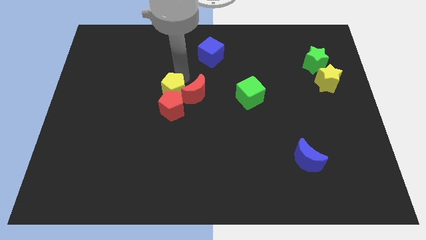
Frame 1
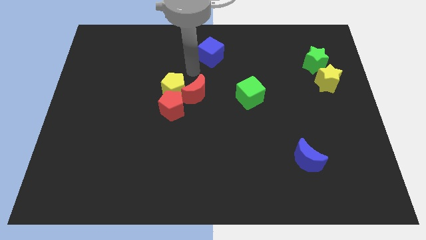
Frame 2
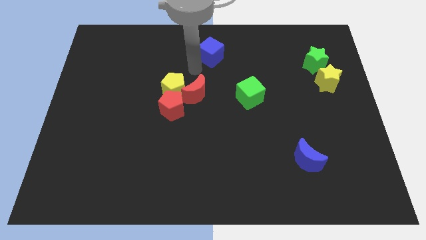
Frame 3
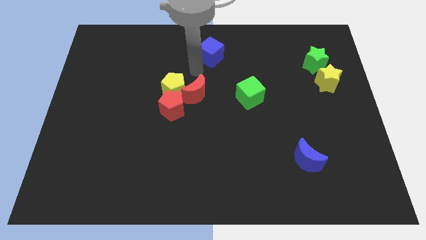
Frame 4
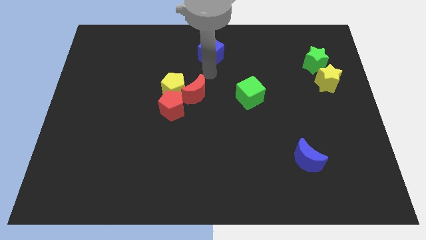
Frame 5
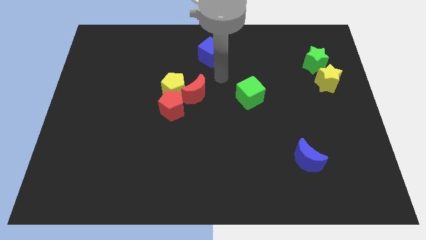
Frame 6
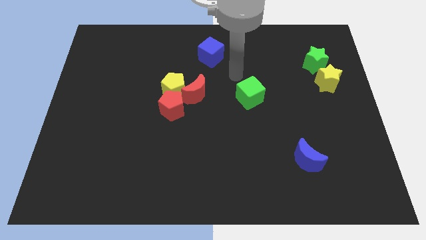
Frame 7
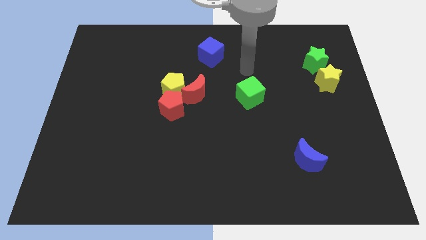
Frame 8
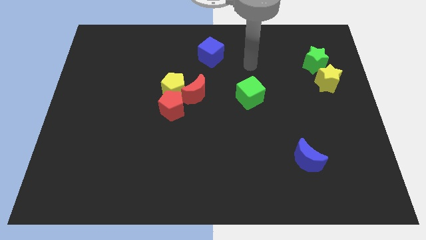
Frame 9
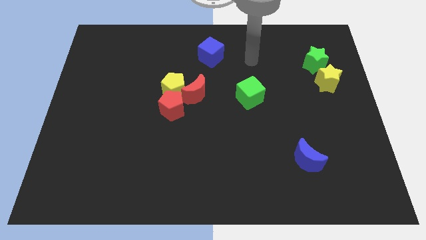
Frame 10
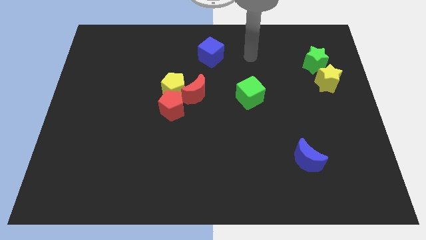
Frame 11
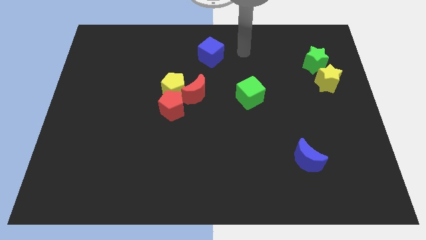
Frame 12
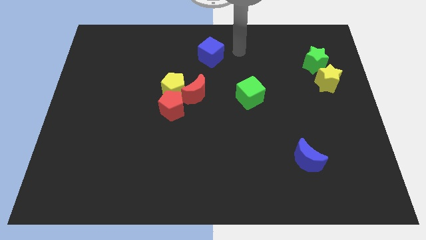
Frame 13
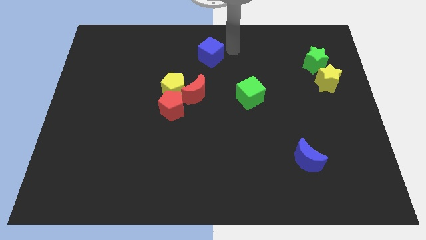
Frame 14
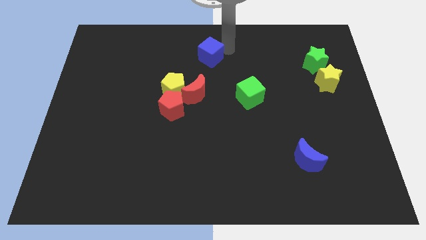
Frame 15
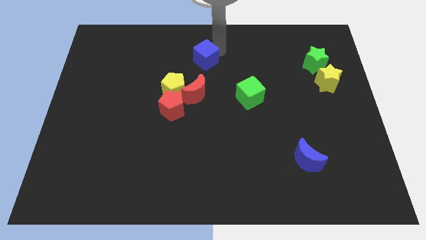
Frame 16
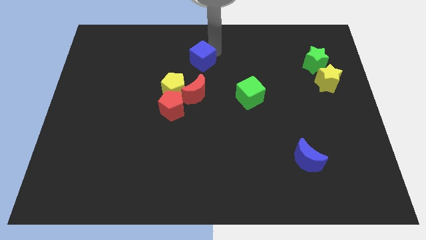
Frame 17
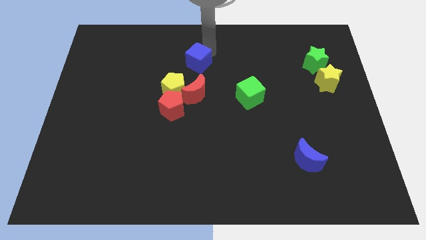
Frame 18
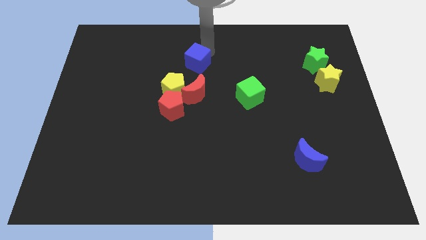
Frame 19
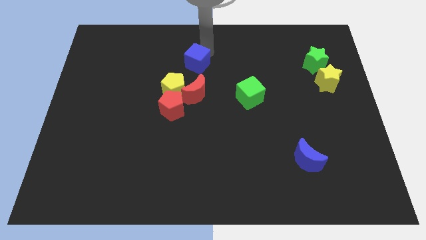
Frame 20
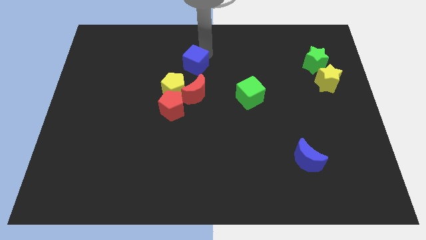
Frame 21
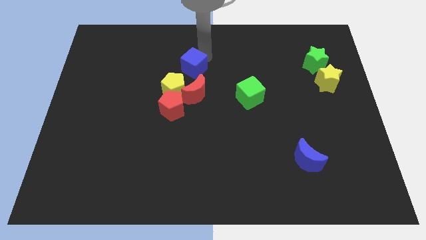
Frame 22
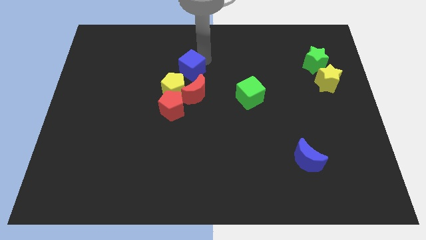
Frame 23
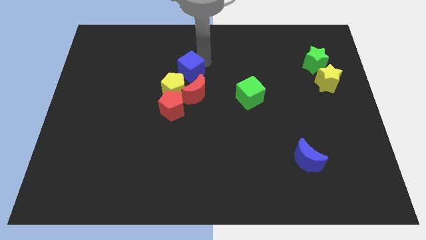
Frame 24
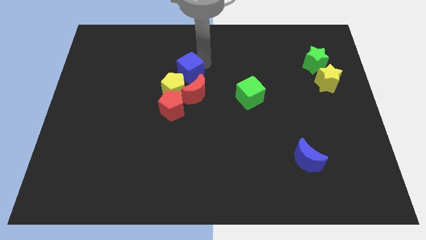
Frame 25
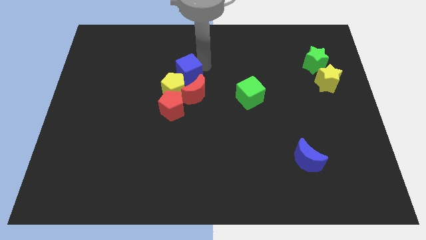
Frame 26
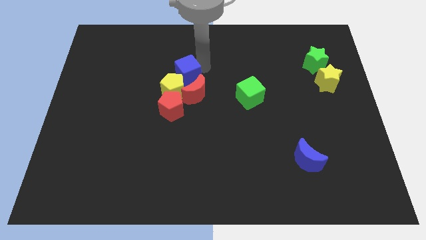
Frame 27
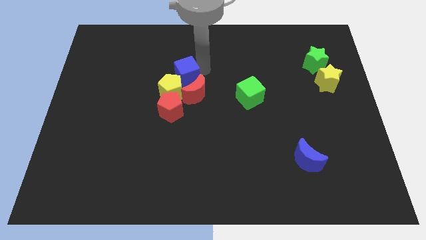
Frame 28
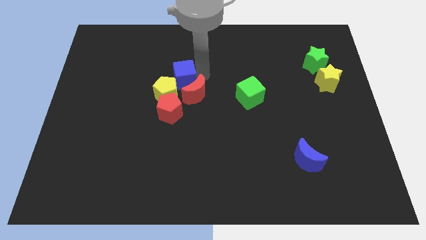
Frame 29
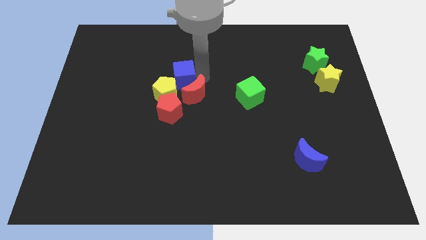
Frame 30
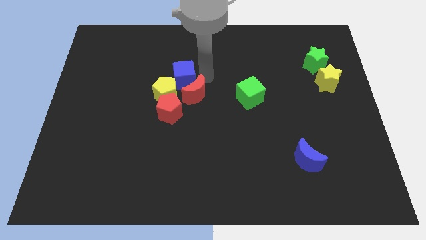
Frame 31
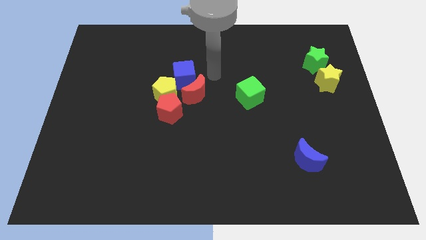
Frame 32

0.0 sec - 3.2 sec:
slide the blue cube into the yellow pentagon

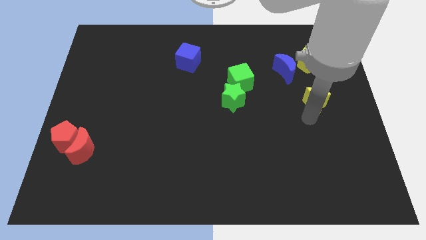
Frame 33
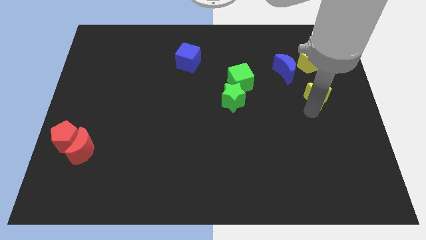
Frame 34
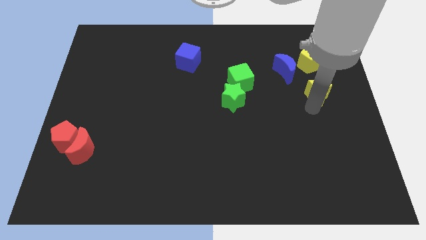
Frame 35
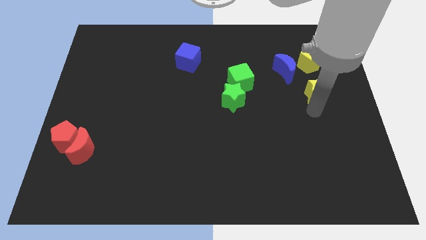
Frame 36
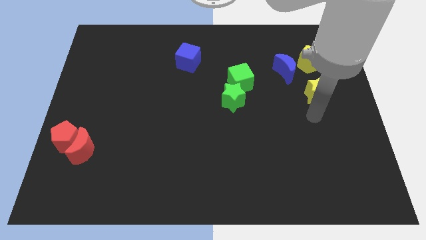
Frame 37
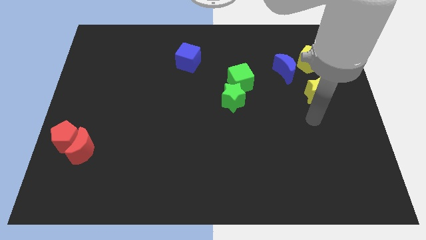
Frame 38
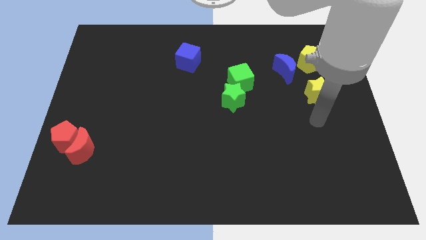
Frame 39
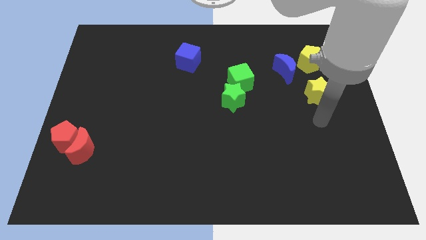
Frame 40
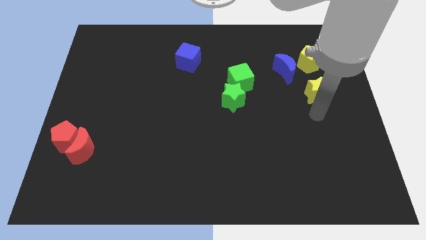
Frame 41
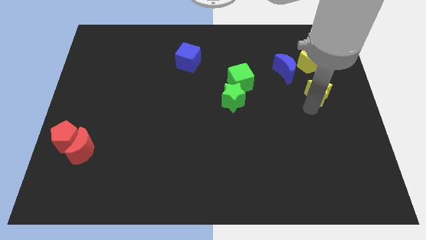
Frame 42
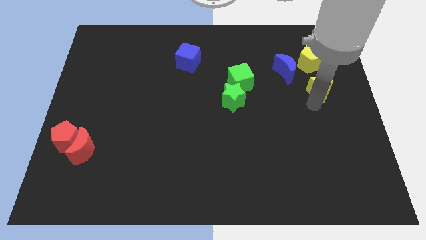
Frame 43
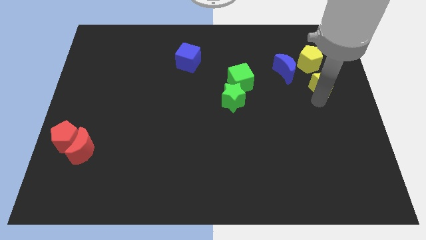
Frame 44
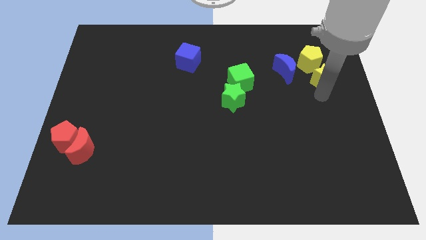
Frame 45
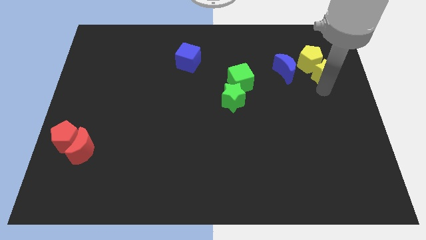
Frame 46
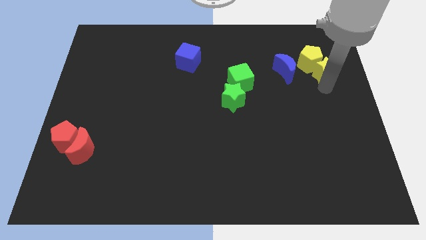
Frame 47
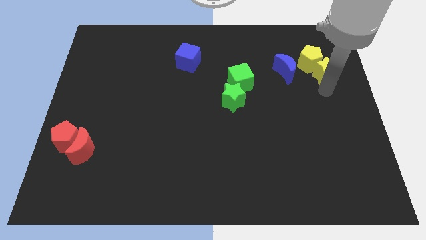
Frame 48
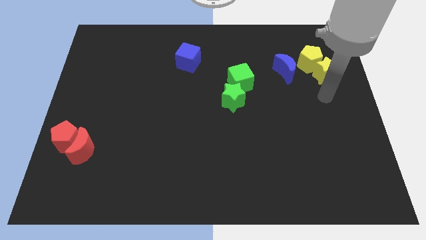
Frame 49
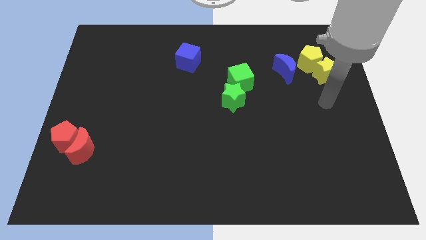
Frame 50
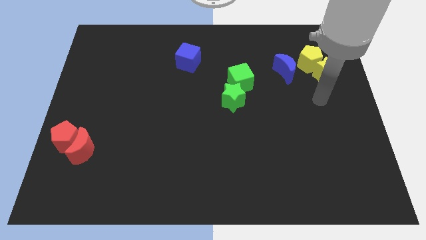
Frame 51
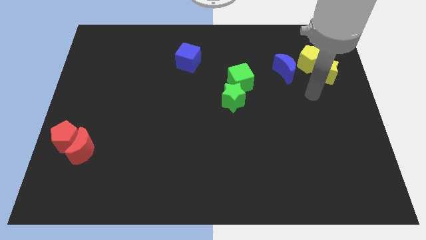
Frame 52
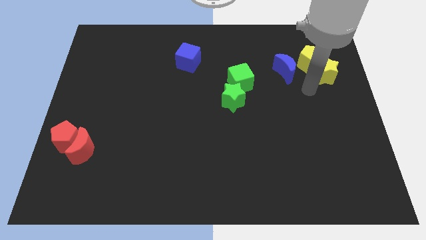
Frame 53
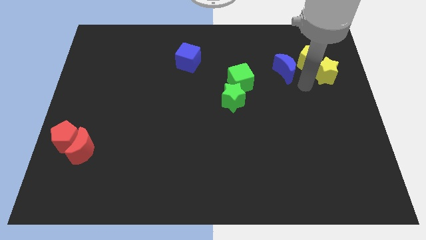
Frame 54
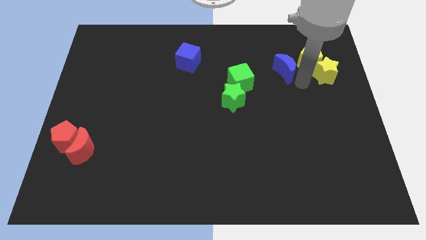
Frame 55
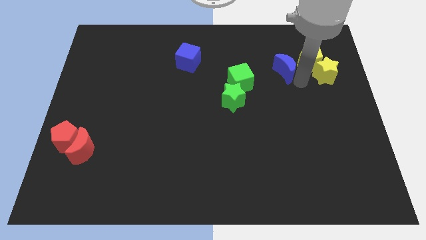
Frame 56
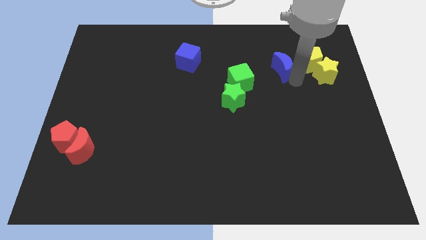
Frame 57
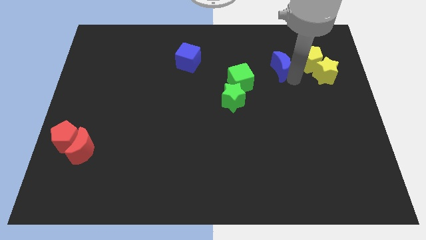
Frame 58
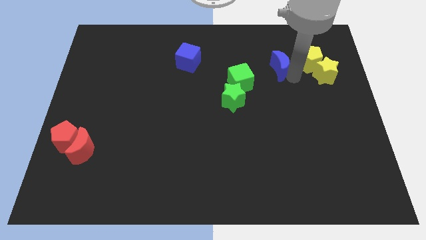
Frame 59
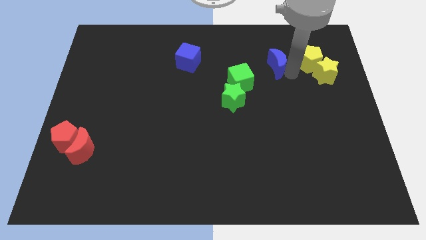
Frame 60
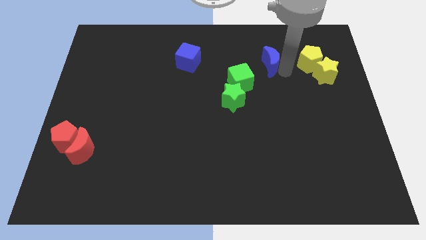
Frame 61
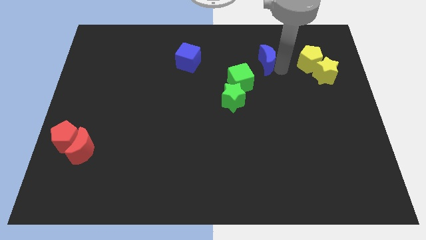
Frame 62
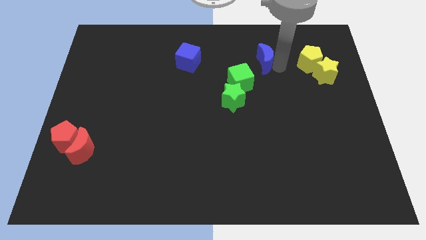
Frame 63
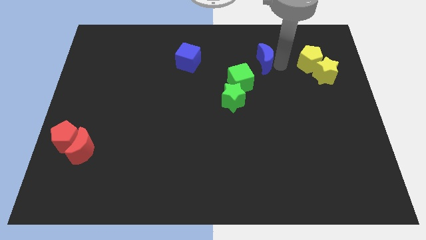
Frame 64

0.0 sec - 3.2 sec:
move yellow star close to the yellow pentagon

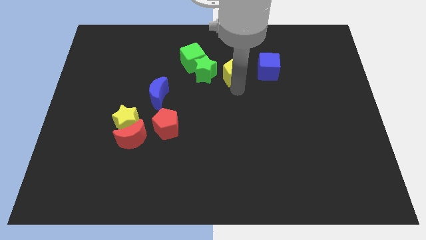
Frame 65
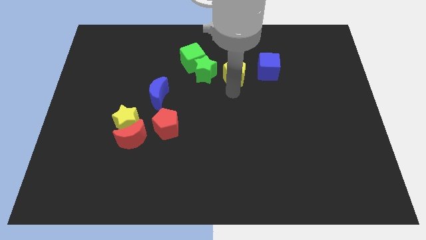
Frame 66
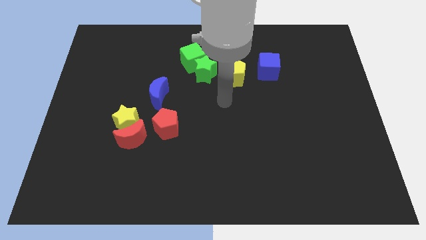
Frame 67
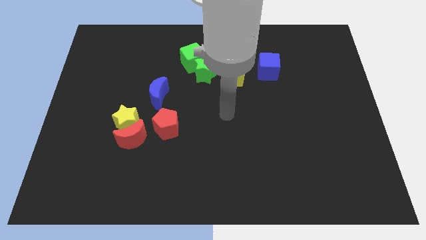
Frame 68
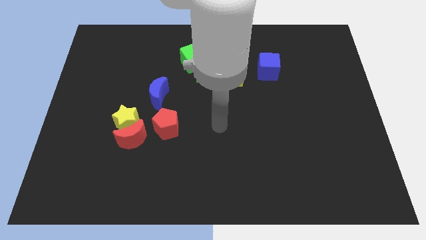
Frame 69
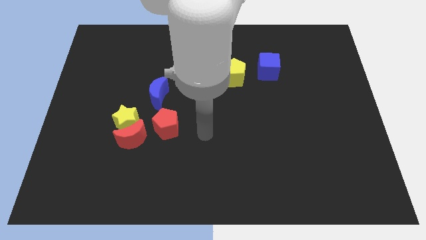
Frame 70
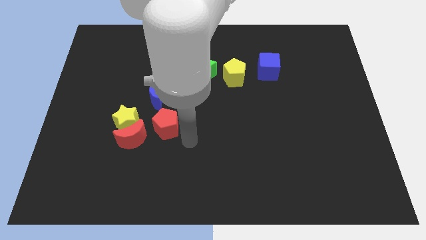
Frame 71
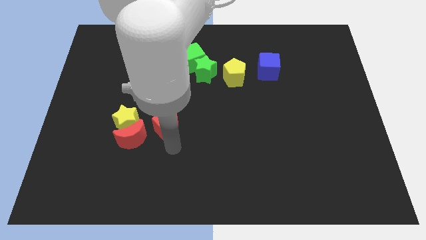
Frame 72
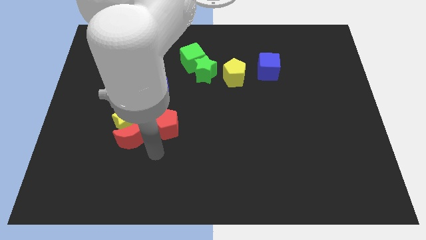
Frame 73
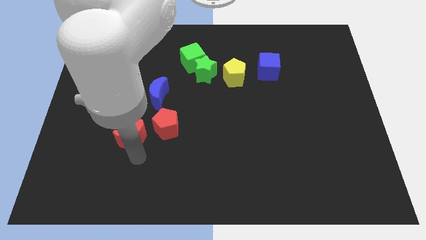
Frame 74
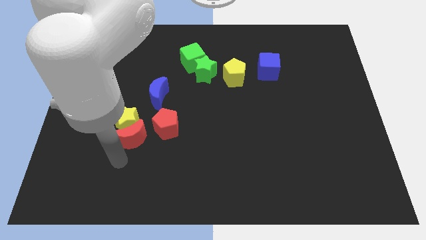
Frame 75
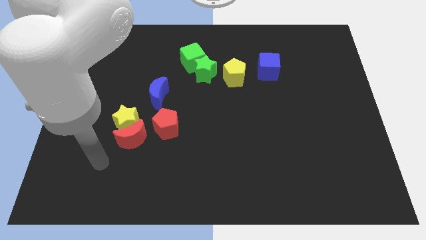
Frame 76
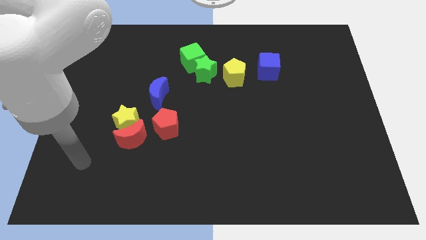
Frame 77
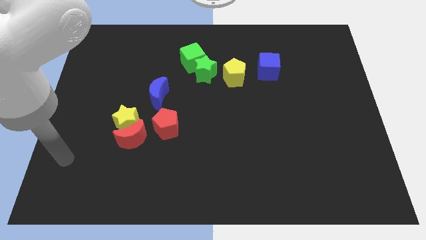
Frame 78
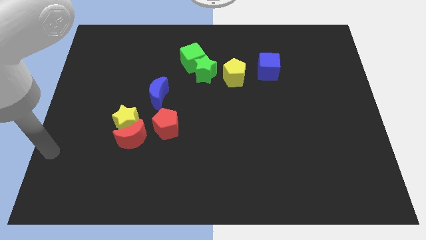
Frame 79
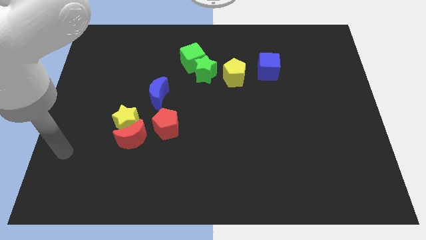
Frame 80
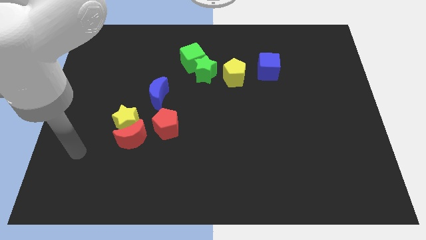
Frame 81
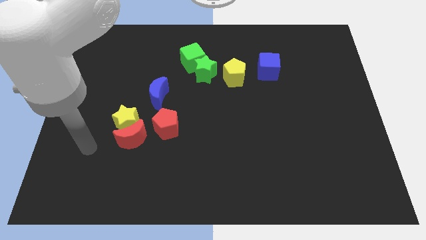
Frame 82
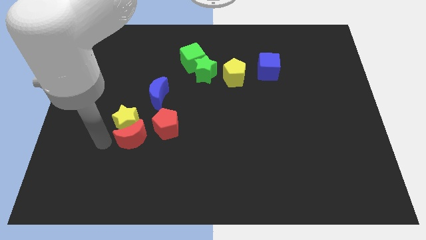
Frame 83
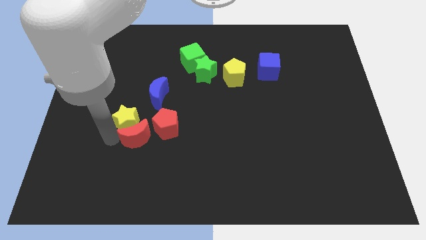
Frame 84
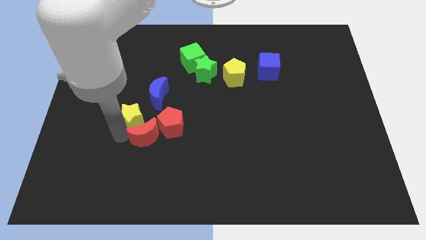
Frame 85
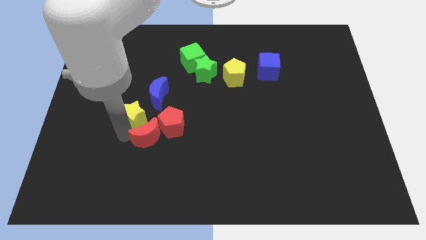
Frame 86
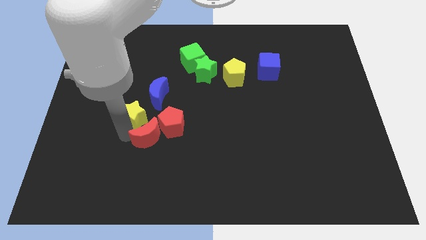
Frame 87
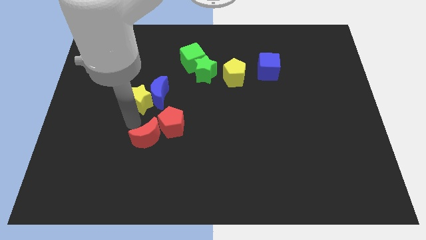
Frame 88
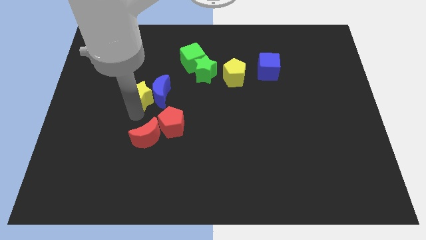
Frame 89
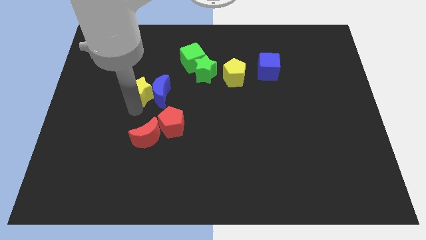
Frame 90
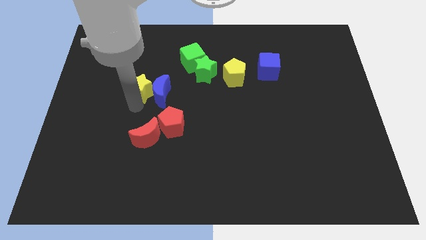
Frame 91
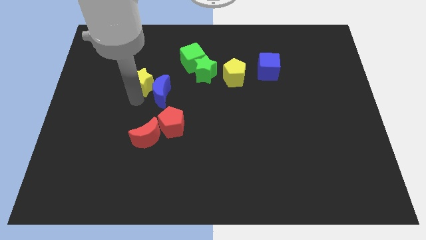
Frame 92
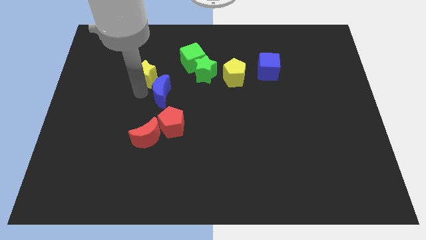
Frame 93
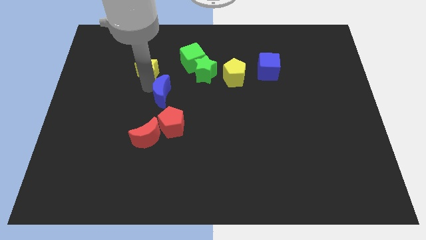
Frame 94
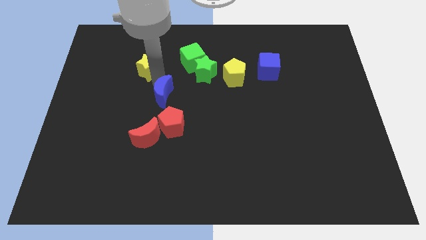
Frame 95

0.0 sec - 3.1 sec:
push the yellow star towards top
